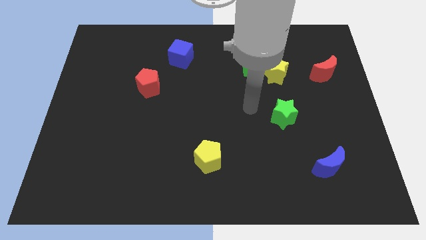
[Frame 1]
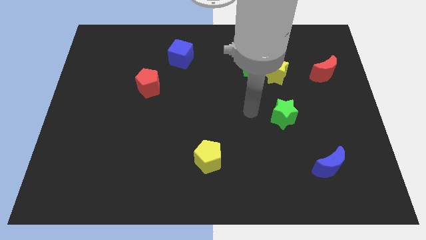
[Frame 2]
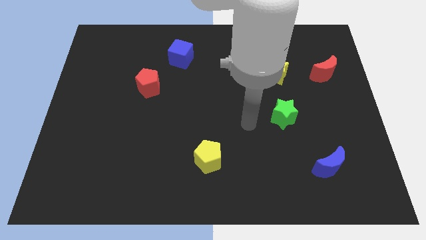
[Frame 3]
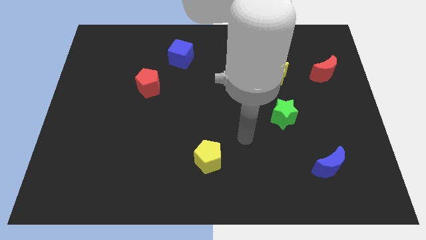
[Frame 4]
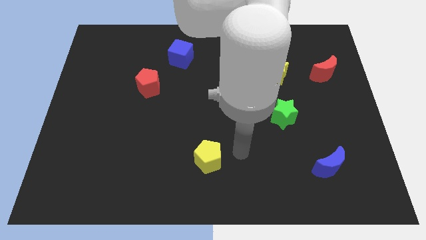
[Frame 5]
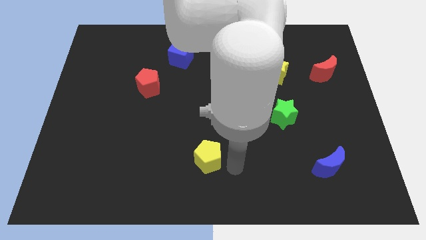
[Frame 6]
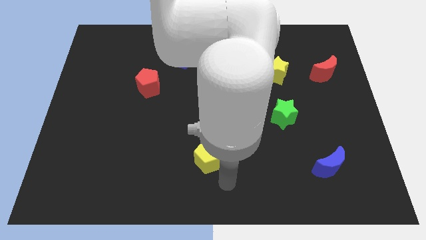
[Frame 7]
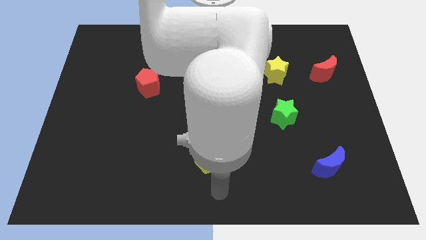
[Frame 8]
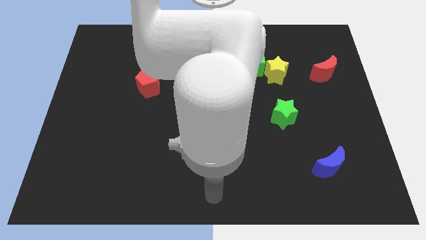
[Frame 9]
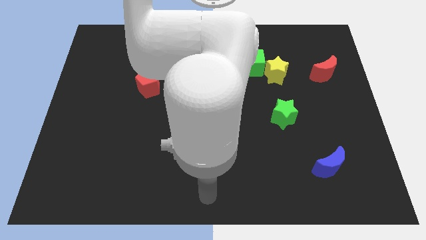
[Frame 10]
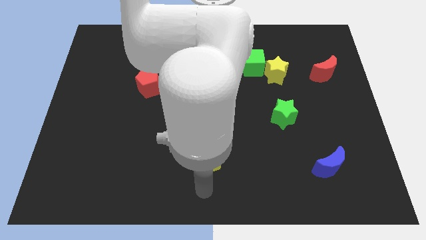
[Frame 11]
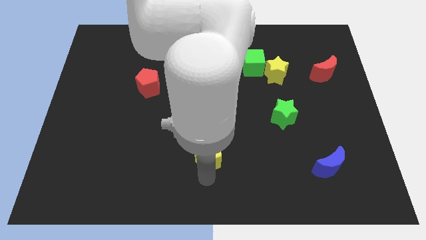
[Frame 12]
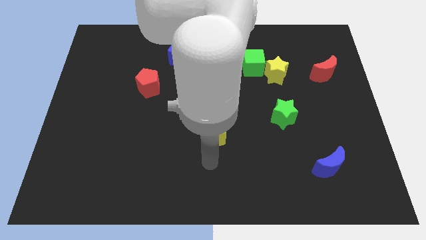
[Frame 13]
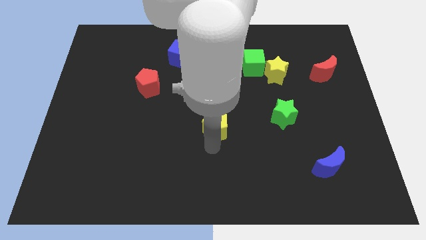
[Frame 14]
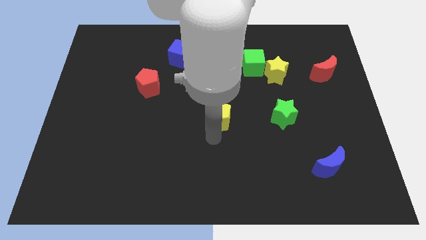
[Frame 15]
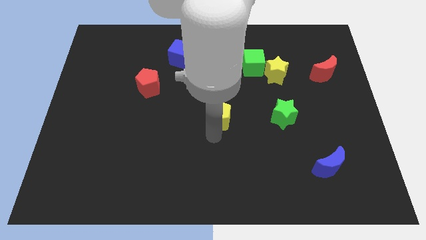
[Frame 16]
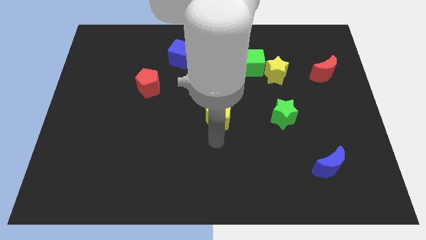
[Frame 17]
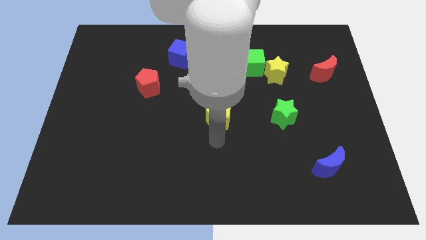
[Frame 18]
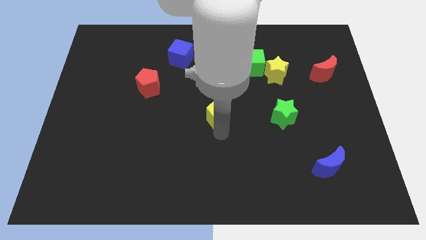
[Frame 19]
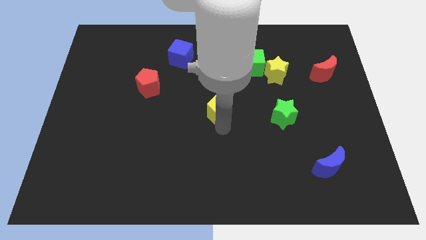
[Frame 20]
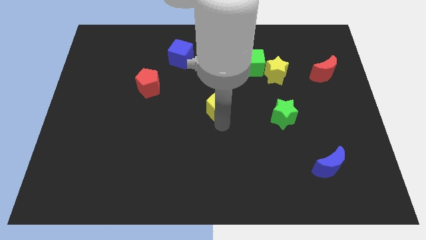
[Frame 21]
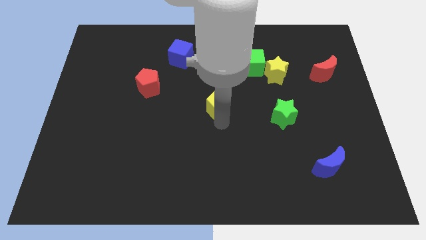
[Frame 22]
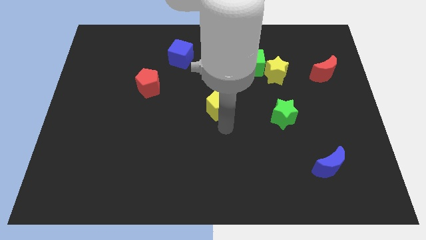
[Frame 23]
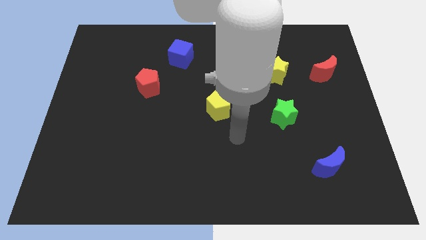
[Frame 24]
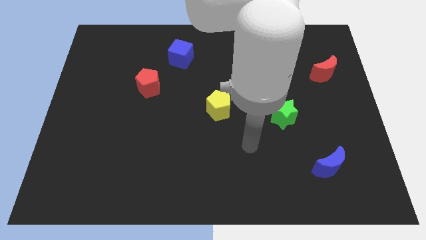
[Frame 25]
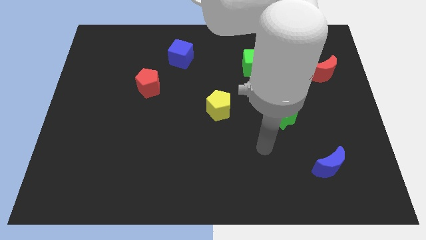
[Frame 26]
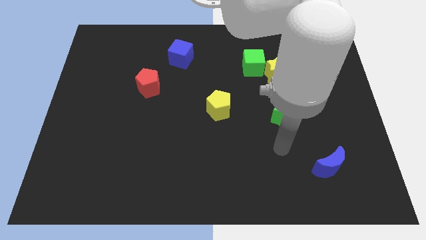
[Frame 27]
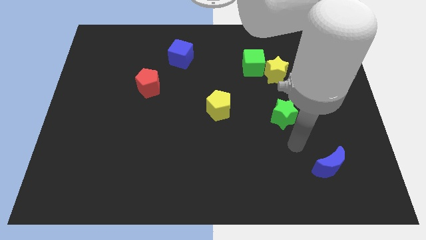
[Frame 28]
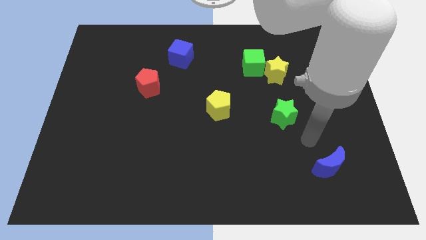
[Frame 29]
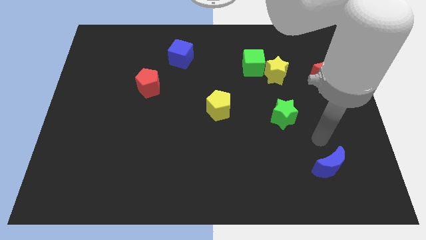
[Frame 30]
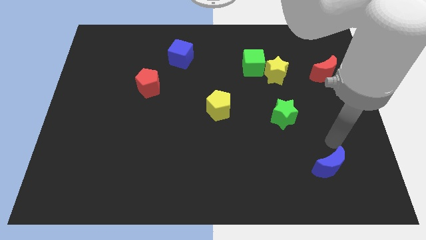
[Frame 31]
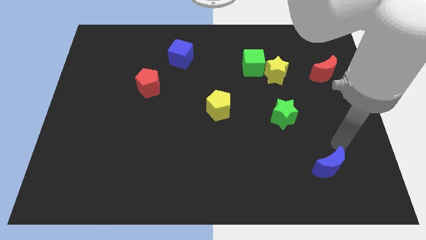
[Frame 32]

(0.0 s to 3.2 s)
push the yellow pentagon to the centre of the board

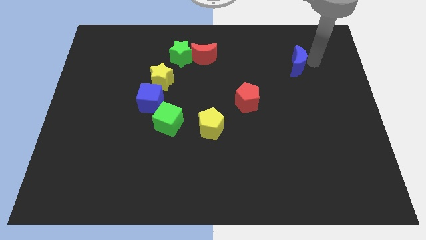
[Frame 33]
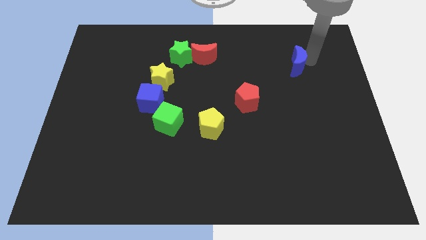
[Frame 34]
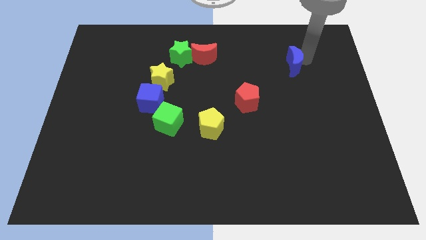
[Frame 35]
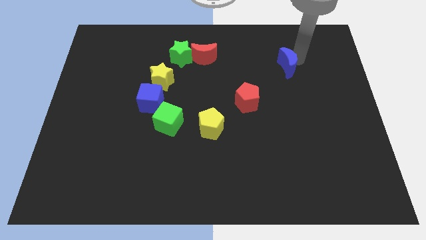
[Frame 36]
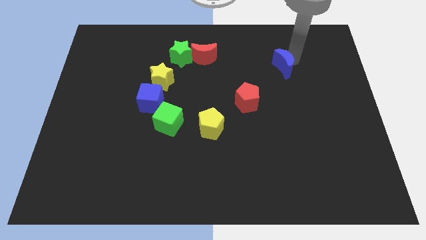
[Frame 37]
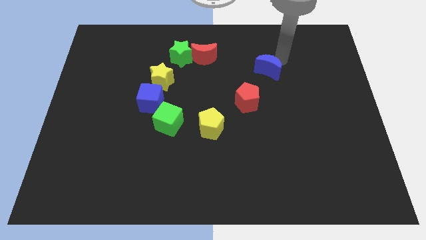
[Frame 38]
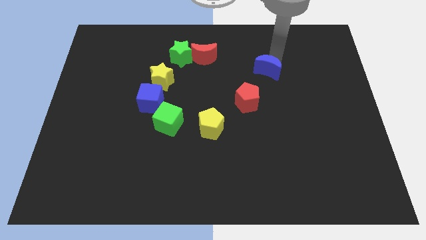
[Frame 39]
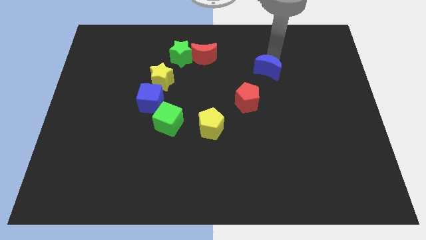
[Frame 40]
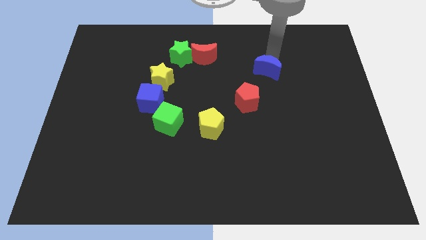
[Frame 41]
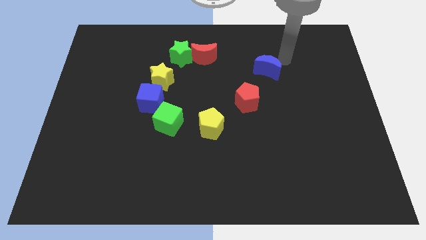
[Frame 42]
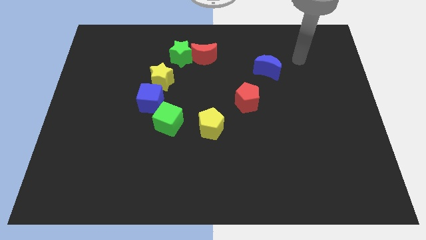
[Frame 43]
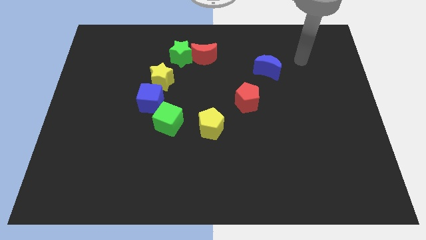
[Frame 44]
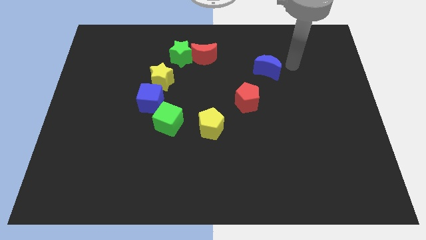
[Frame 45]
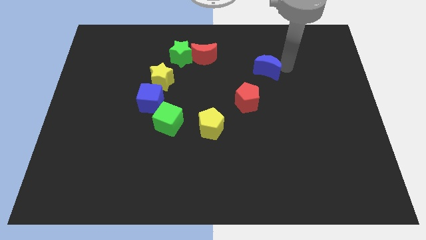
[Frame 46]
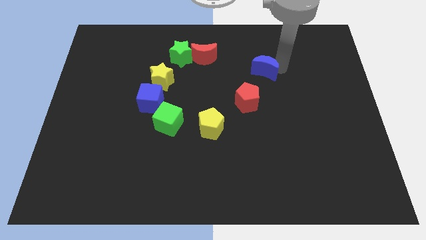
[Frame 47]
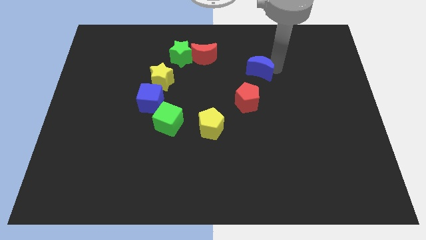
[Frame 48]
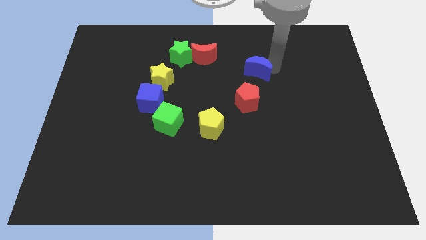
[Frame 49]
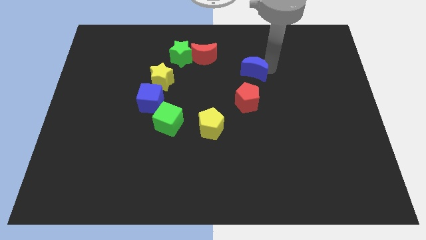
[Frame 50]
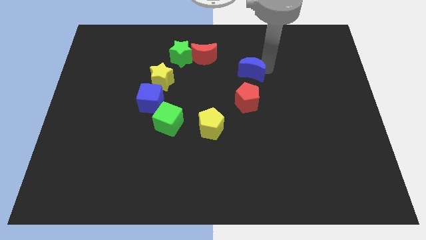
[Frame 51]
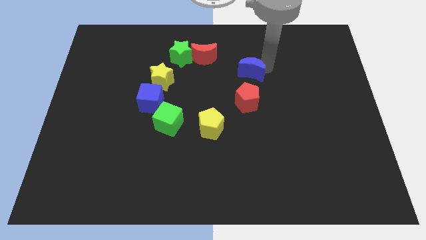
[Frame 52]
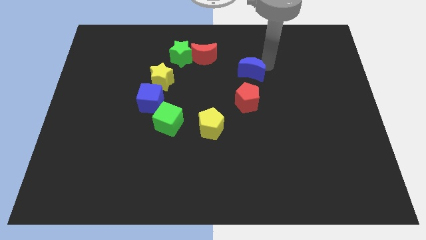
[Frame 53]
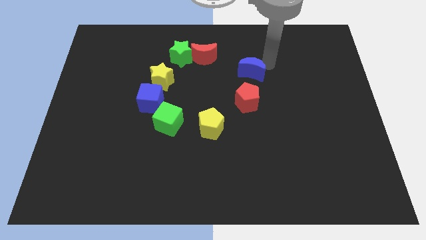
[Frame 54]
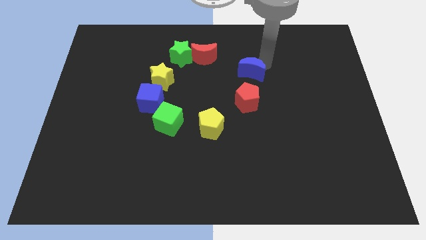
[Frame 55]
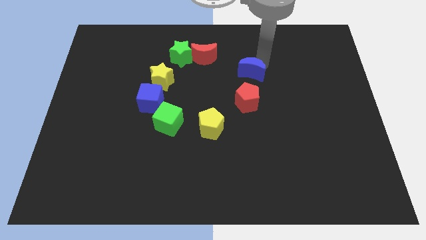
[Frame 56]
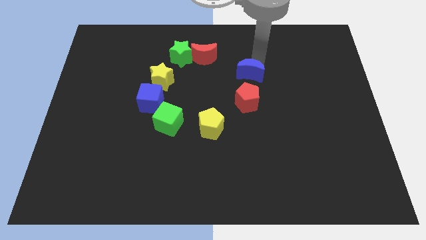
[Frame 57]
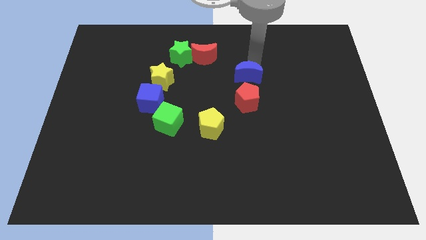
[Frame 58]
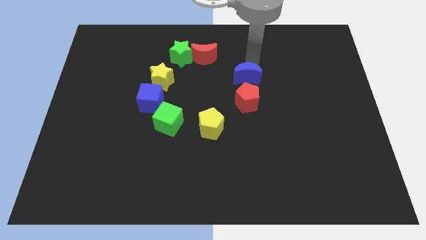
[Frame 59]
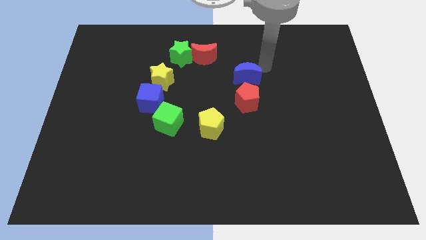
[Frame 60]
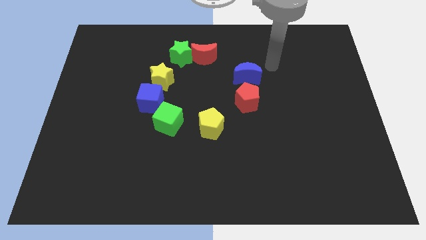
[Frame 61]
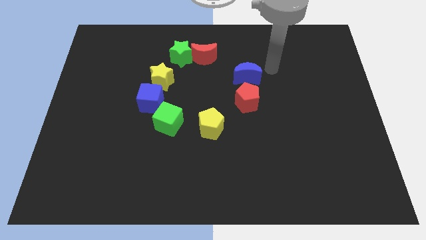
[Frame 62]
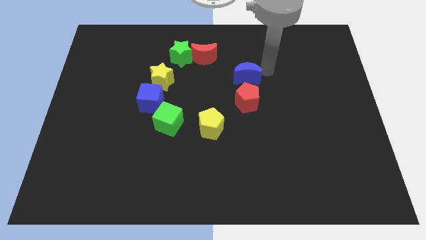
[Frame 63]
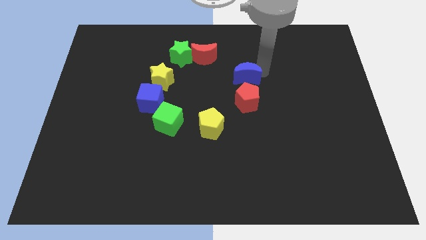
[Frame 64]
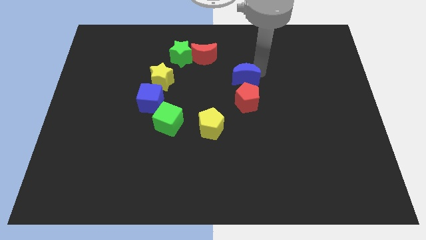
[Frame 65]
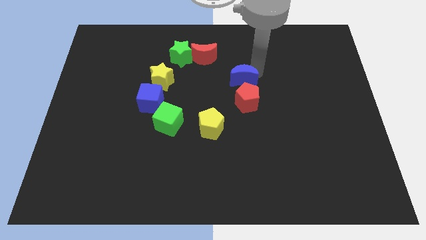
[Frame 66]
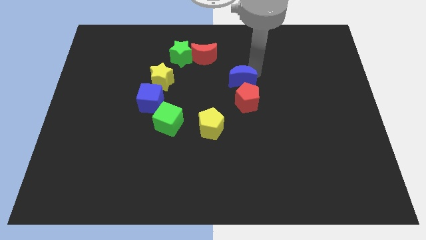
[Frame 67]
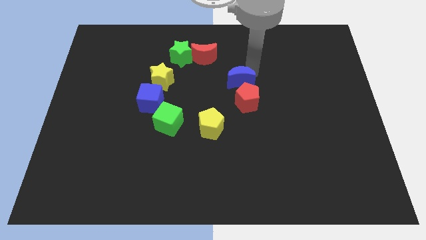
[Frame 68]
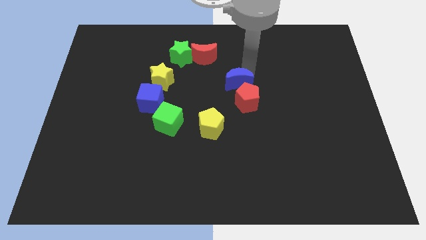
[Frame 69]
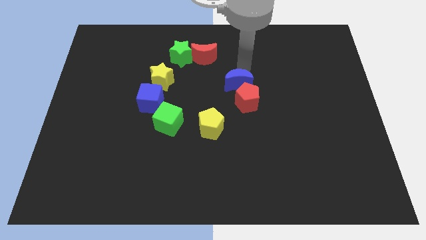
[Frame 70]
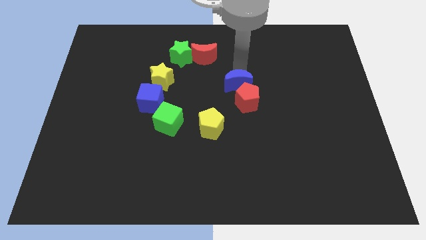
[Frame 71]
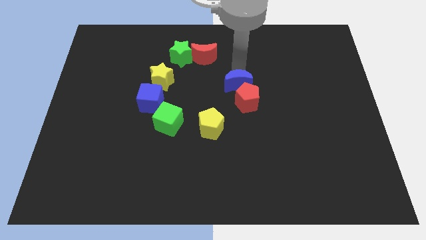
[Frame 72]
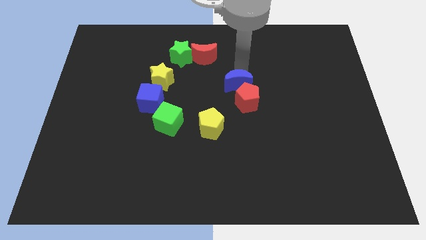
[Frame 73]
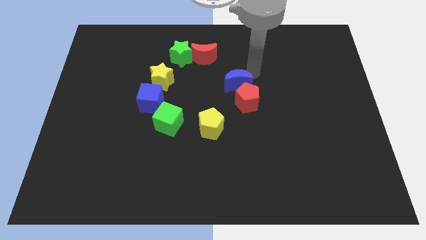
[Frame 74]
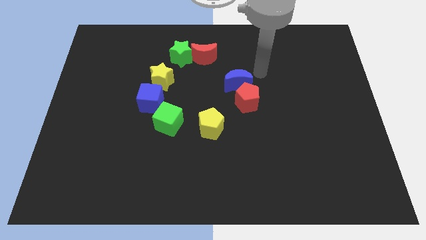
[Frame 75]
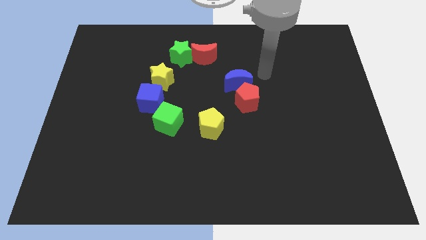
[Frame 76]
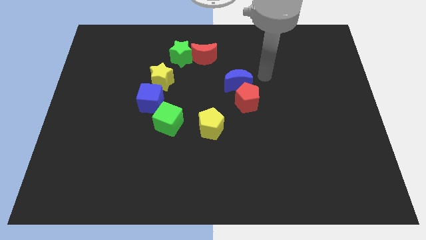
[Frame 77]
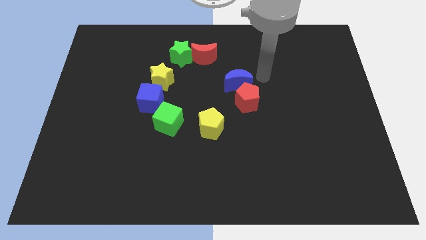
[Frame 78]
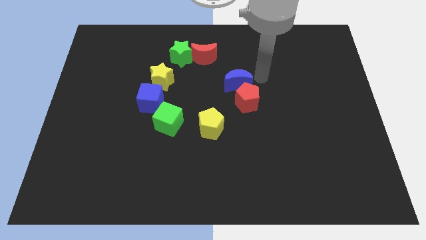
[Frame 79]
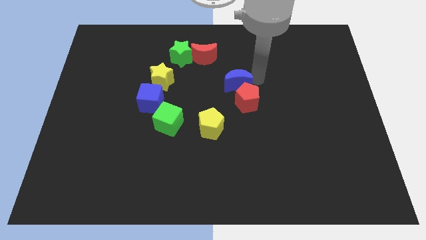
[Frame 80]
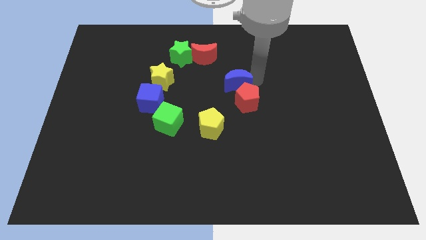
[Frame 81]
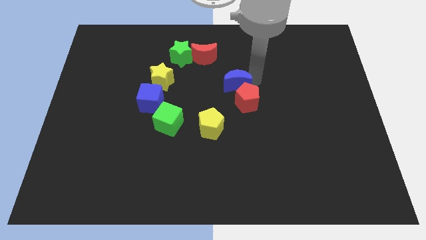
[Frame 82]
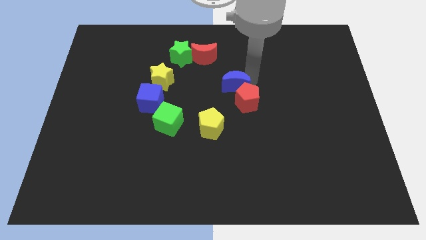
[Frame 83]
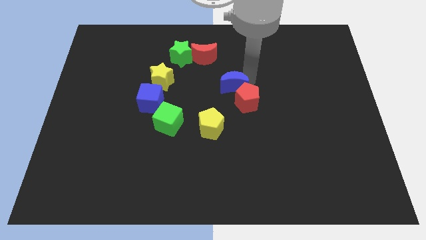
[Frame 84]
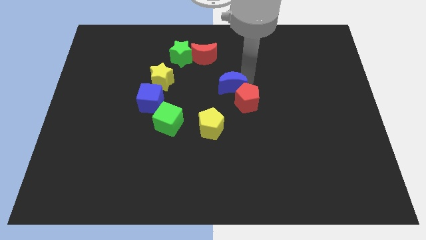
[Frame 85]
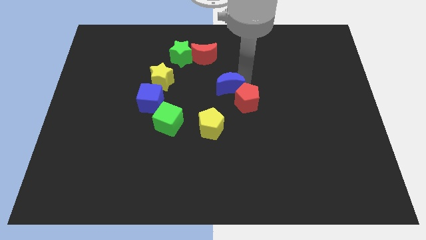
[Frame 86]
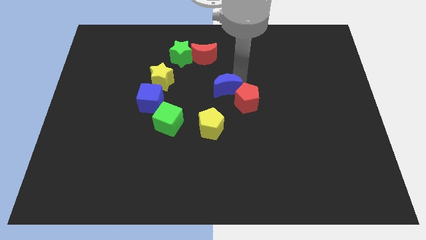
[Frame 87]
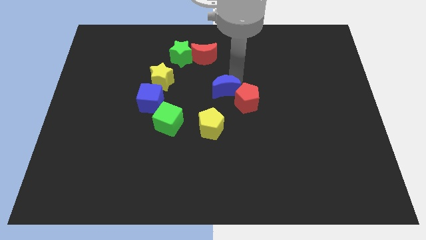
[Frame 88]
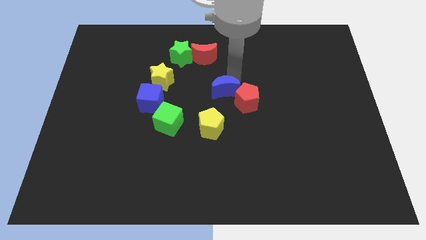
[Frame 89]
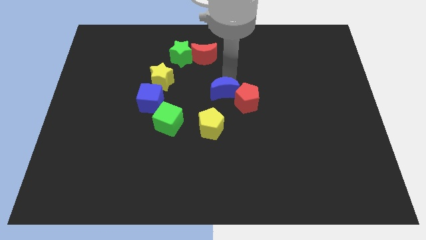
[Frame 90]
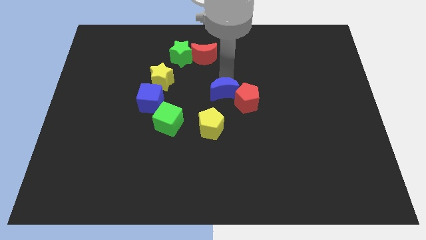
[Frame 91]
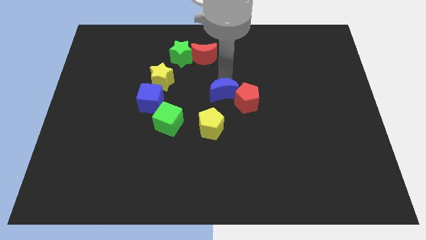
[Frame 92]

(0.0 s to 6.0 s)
put a blue moon to the left of the red pentagon
